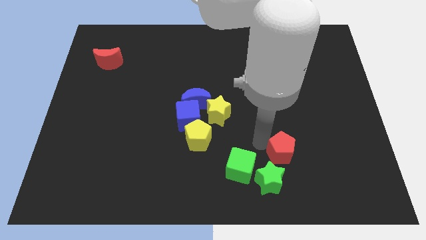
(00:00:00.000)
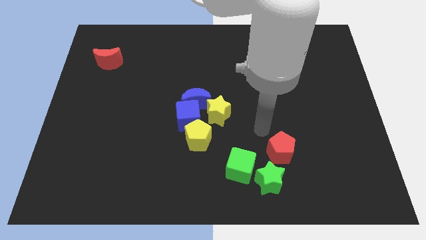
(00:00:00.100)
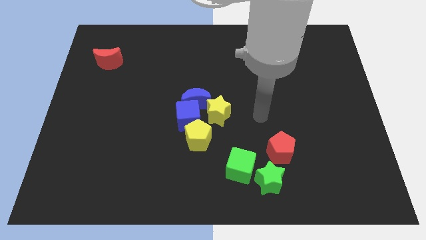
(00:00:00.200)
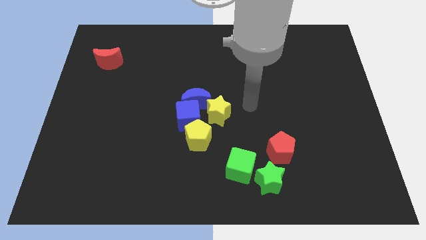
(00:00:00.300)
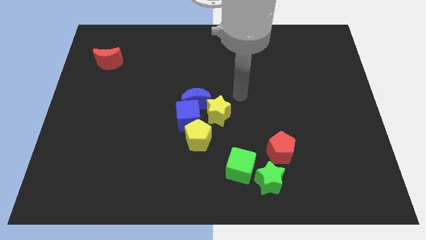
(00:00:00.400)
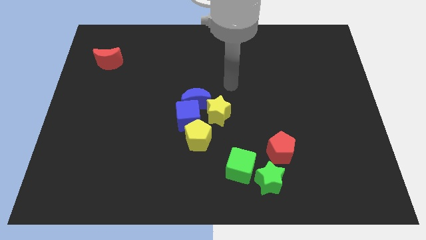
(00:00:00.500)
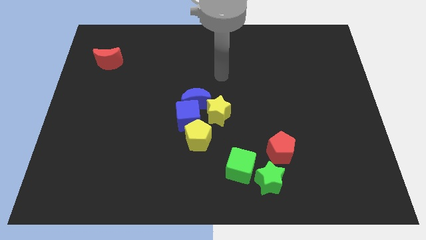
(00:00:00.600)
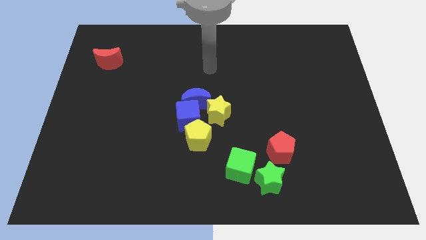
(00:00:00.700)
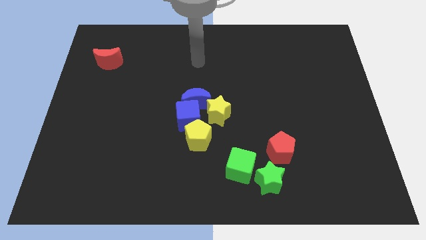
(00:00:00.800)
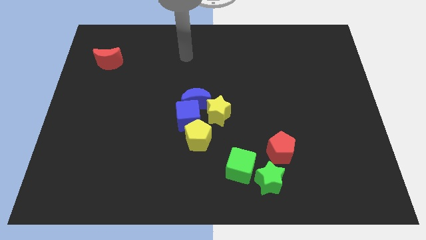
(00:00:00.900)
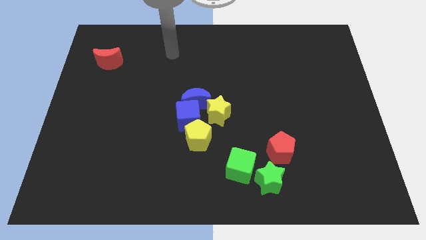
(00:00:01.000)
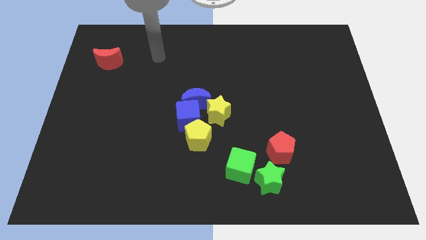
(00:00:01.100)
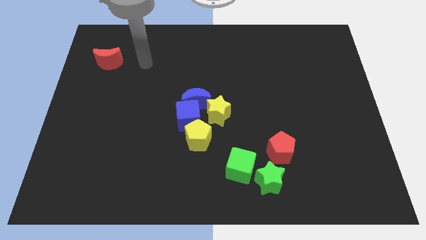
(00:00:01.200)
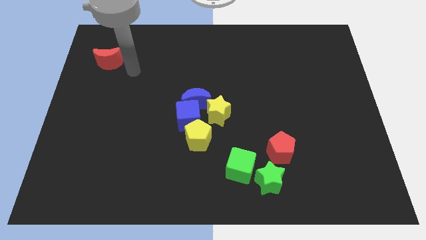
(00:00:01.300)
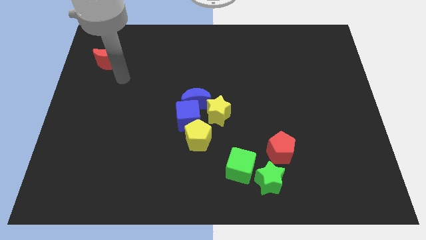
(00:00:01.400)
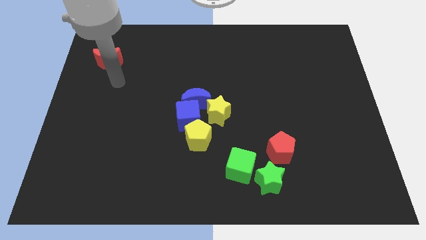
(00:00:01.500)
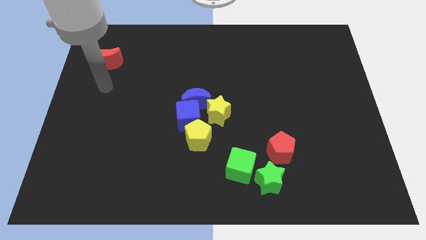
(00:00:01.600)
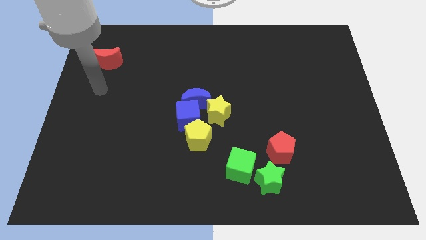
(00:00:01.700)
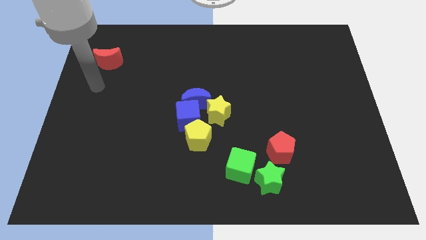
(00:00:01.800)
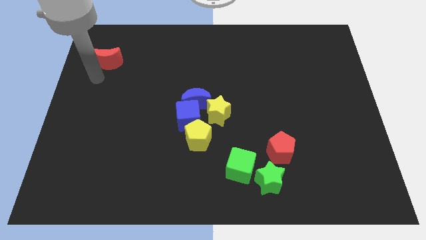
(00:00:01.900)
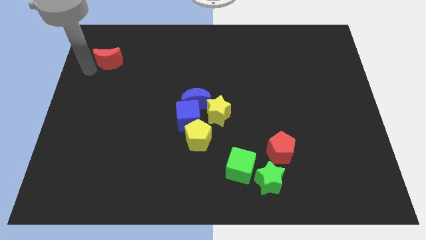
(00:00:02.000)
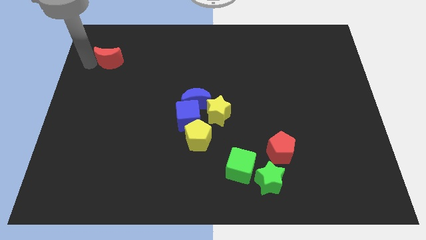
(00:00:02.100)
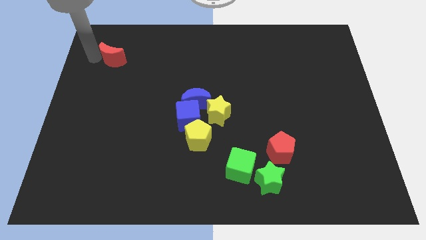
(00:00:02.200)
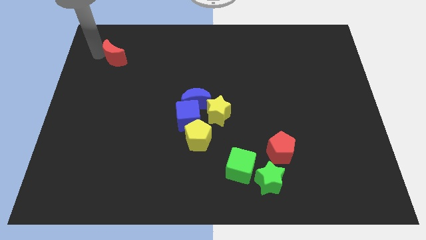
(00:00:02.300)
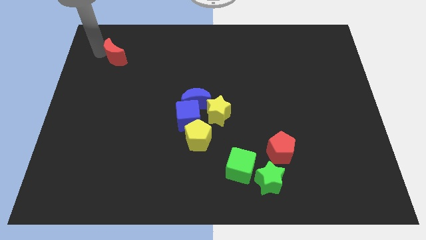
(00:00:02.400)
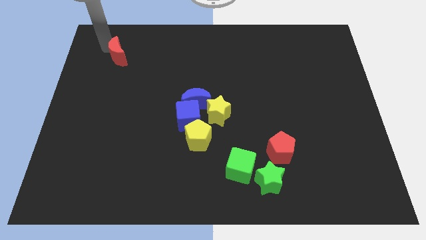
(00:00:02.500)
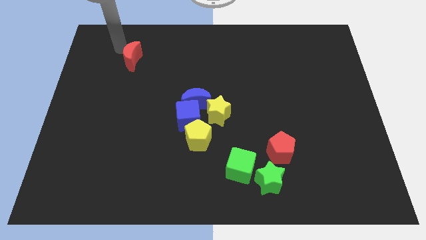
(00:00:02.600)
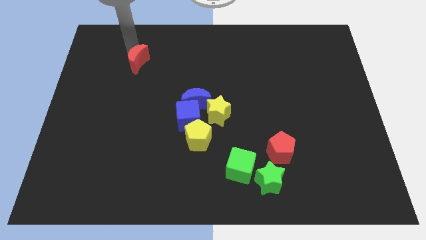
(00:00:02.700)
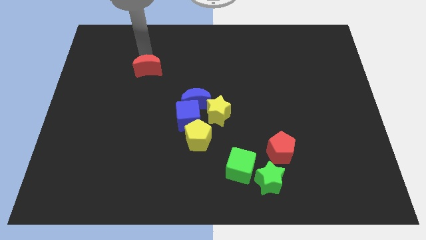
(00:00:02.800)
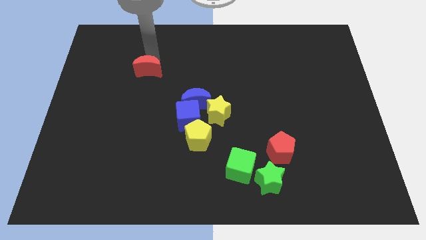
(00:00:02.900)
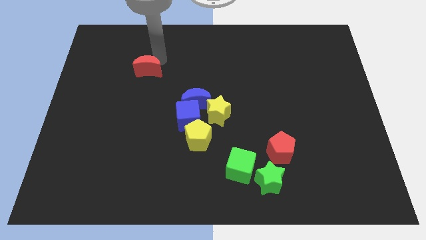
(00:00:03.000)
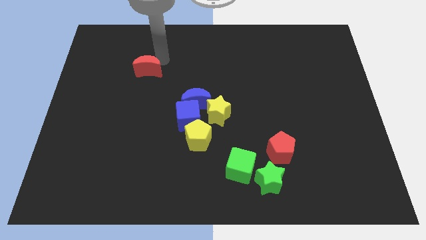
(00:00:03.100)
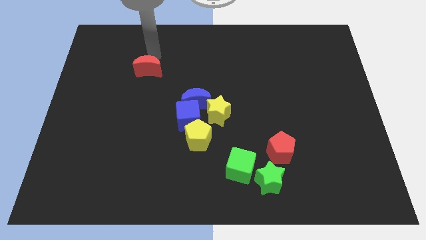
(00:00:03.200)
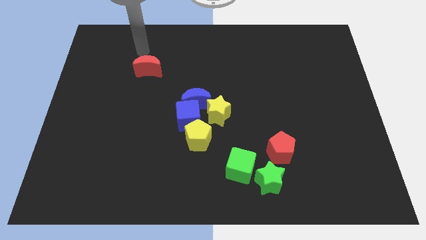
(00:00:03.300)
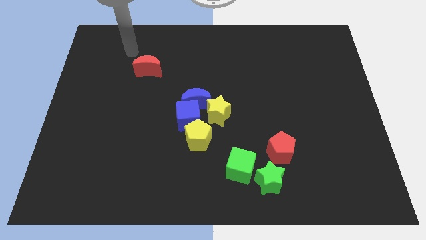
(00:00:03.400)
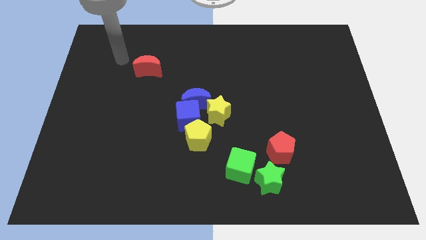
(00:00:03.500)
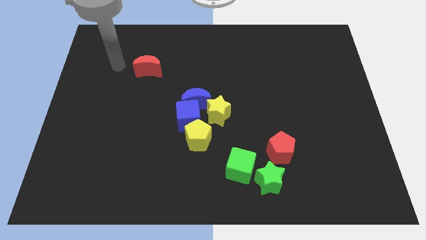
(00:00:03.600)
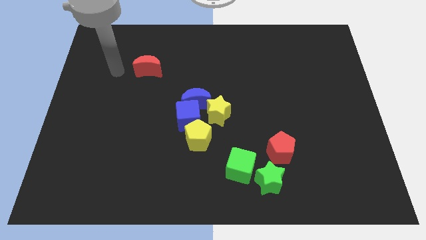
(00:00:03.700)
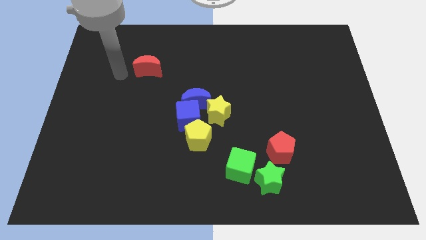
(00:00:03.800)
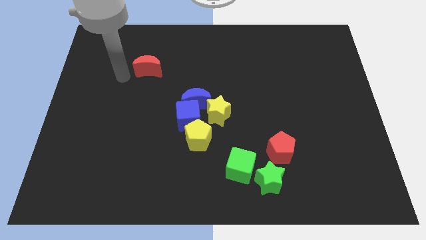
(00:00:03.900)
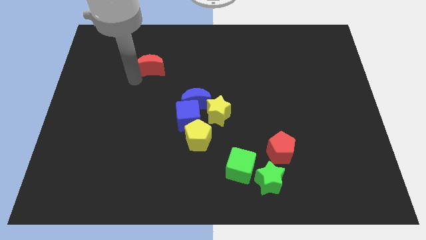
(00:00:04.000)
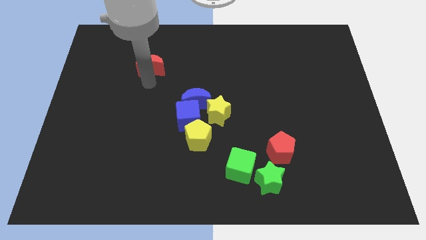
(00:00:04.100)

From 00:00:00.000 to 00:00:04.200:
place your arm at the bottom of the red moon

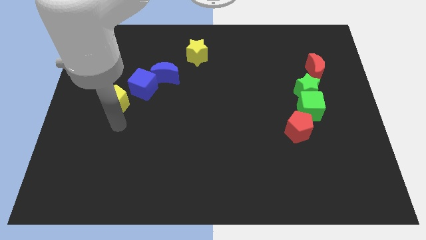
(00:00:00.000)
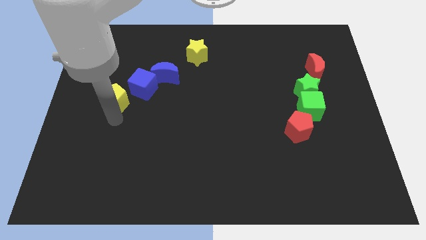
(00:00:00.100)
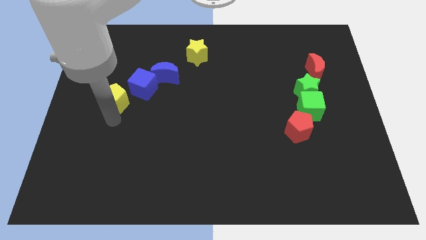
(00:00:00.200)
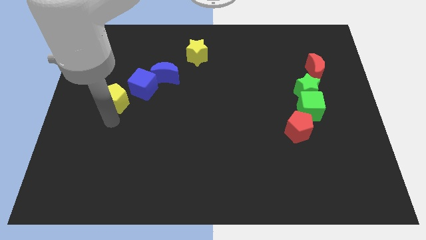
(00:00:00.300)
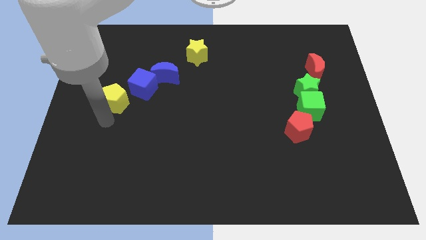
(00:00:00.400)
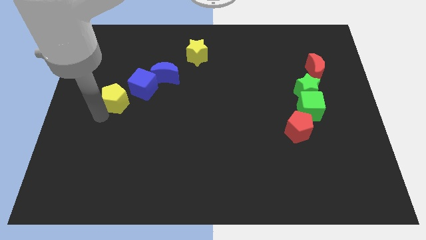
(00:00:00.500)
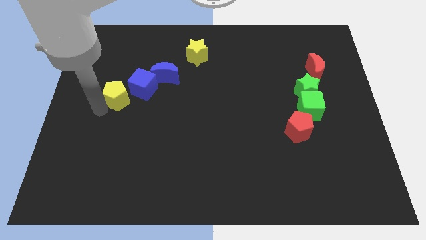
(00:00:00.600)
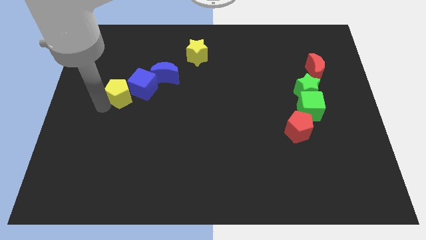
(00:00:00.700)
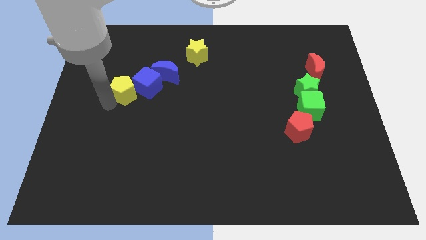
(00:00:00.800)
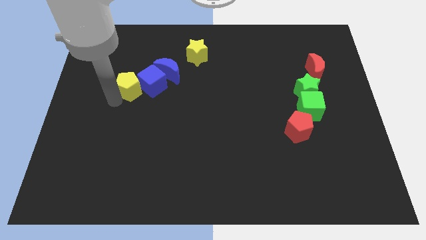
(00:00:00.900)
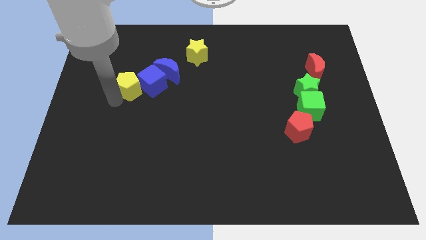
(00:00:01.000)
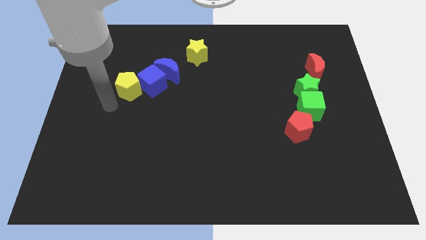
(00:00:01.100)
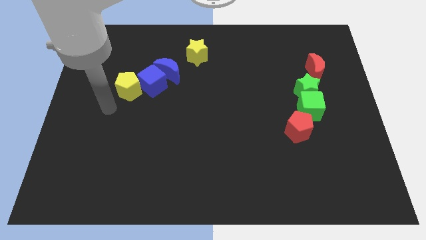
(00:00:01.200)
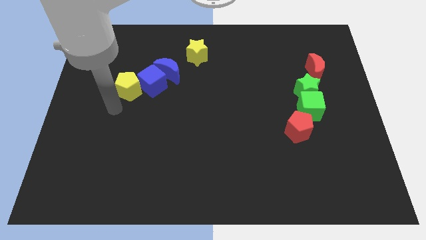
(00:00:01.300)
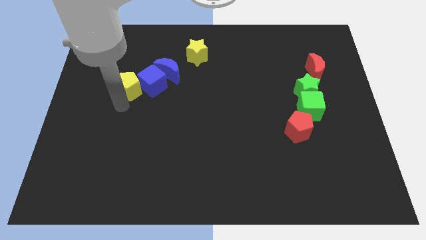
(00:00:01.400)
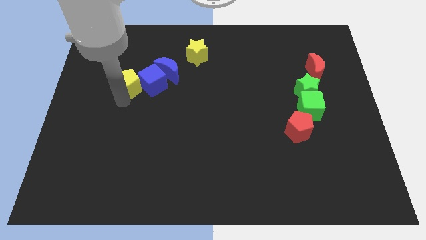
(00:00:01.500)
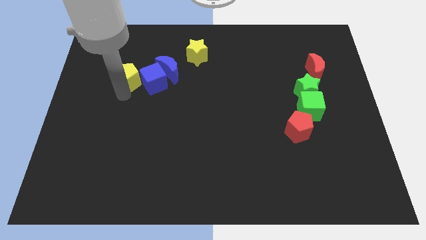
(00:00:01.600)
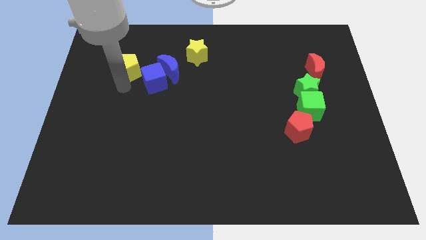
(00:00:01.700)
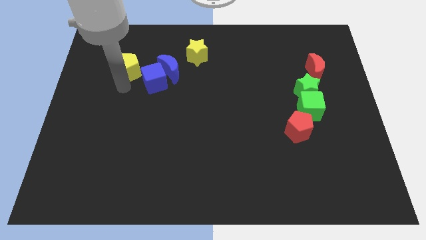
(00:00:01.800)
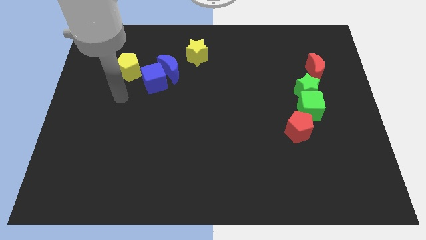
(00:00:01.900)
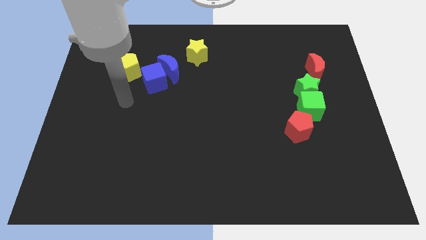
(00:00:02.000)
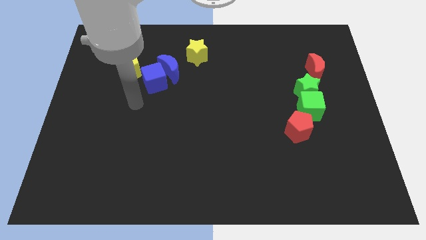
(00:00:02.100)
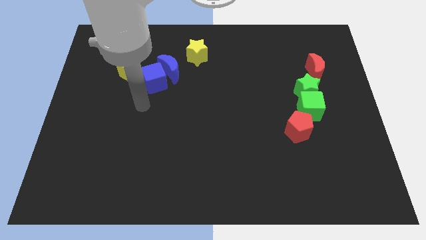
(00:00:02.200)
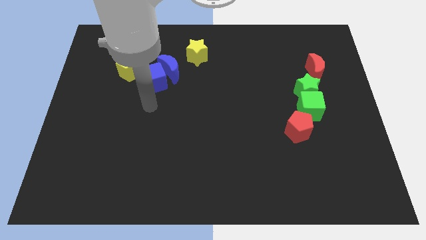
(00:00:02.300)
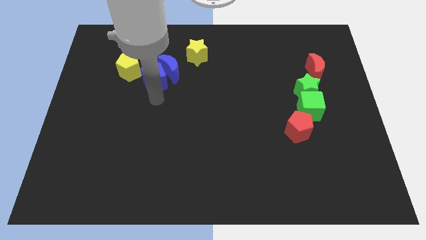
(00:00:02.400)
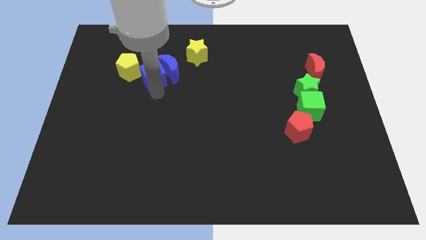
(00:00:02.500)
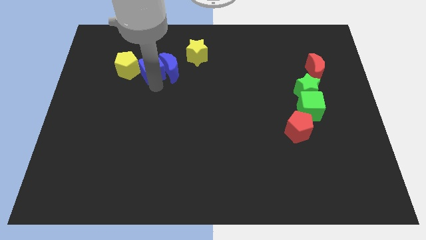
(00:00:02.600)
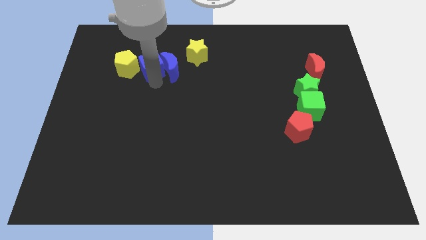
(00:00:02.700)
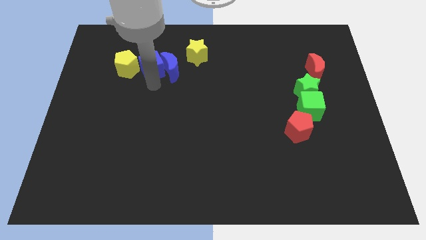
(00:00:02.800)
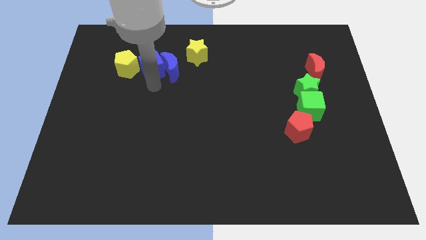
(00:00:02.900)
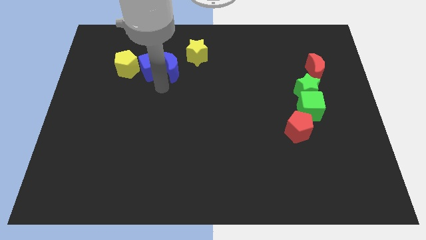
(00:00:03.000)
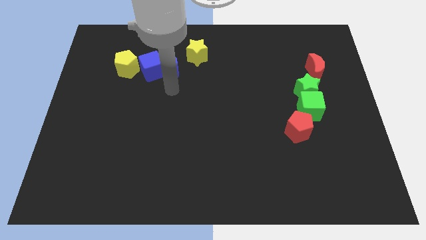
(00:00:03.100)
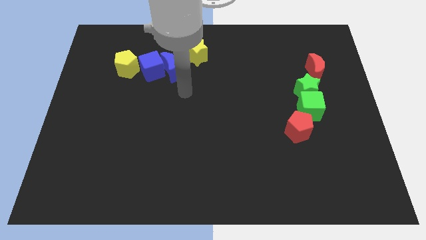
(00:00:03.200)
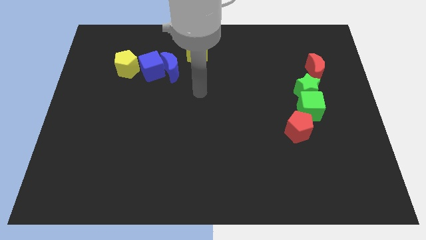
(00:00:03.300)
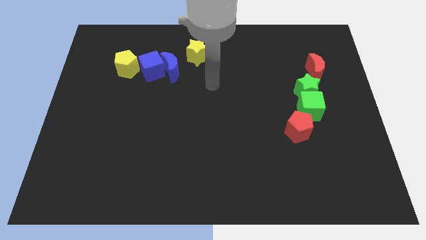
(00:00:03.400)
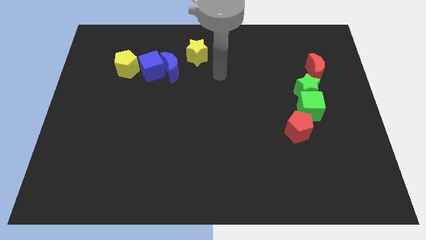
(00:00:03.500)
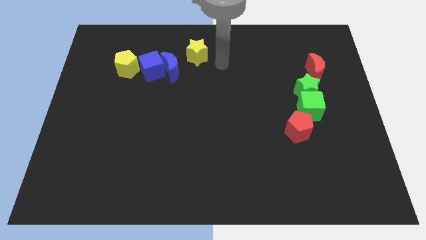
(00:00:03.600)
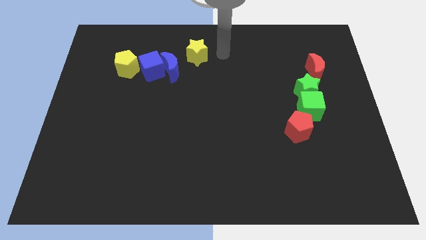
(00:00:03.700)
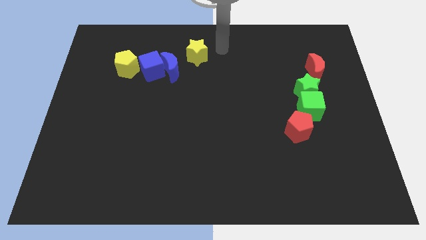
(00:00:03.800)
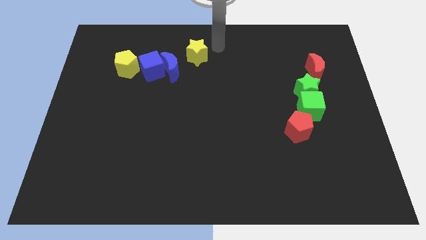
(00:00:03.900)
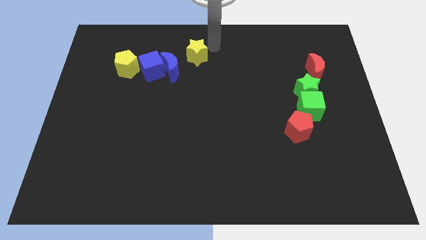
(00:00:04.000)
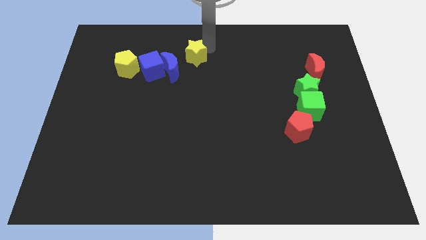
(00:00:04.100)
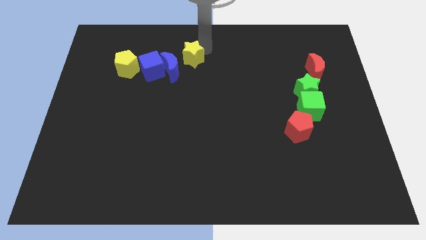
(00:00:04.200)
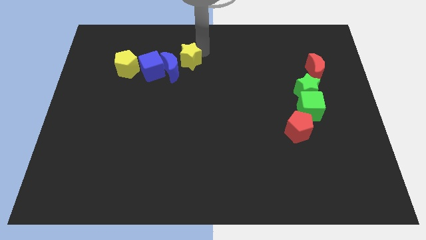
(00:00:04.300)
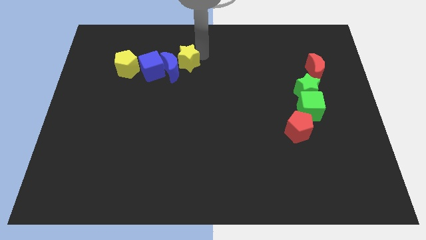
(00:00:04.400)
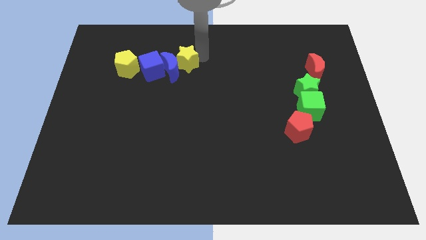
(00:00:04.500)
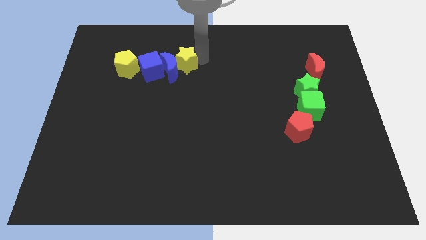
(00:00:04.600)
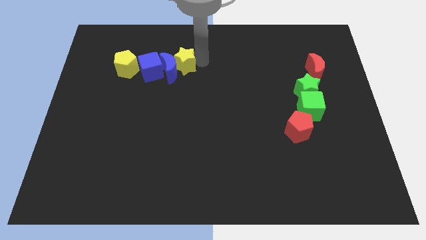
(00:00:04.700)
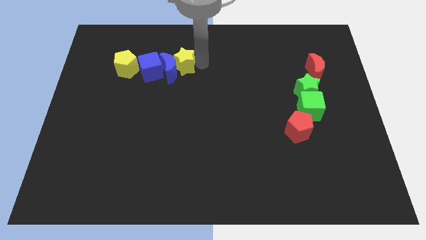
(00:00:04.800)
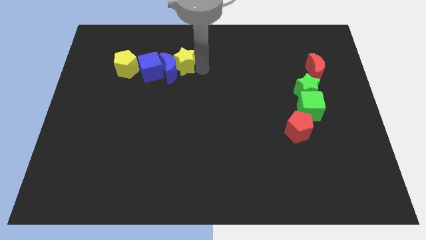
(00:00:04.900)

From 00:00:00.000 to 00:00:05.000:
place blue cube and blue moon in between the yellow pentagon and yellow star
